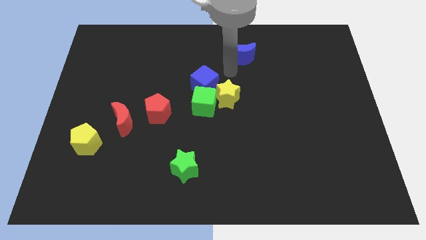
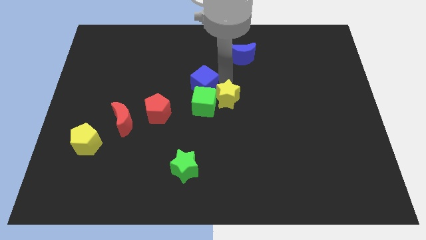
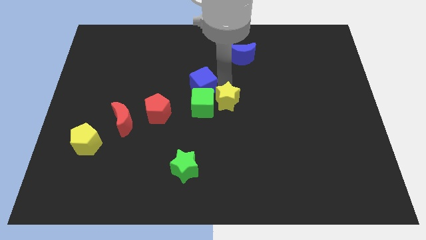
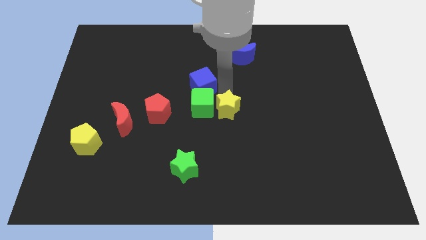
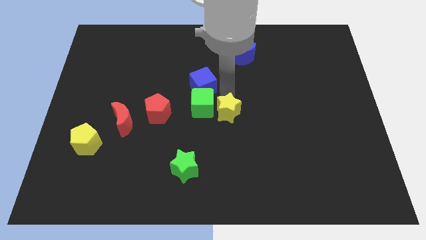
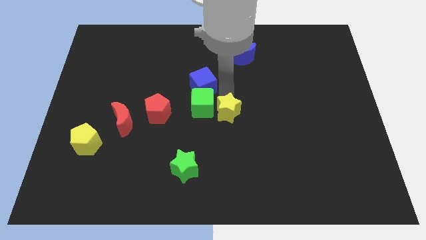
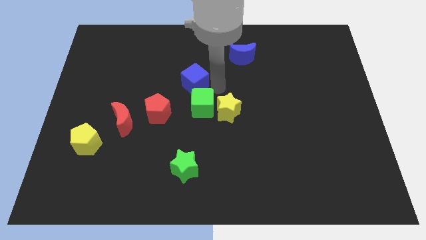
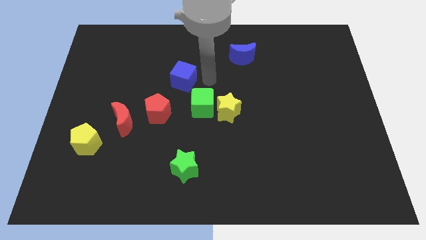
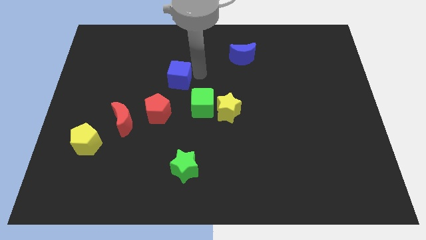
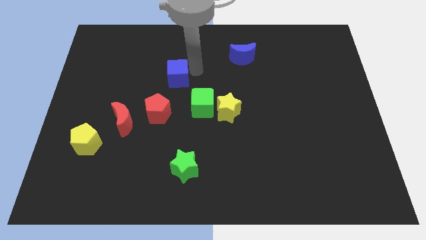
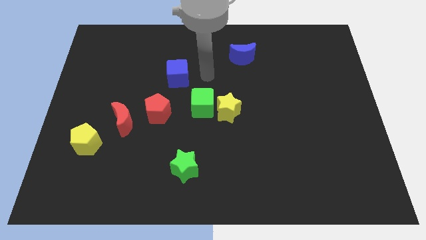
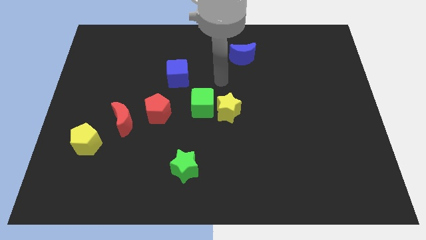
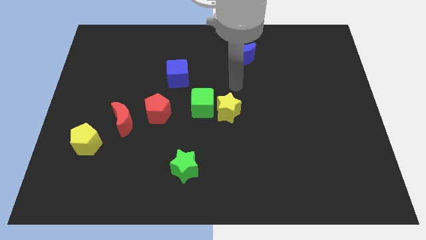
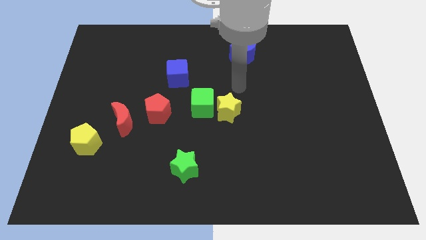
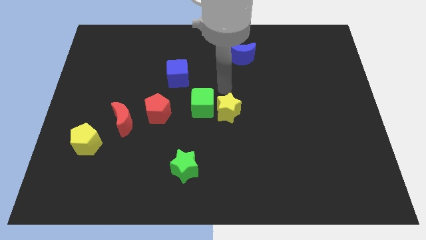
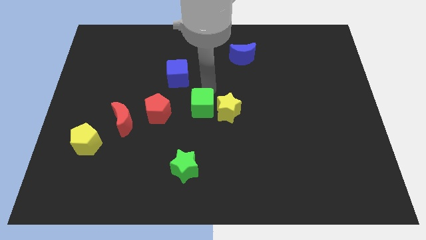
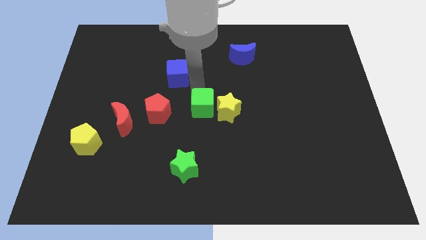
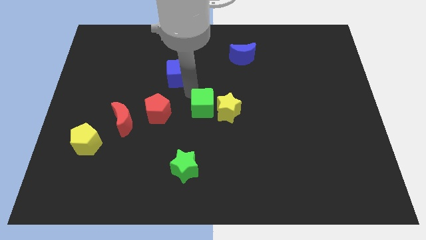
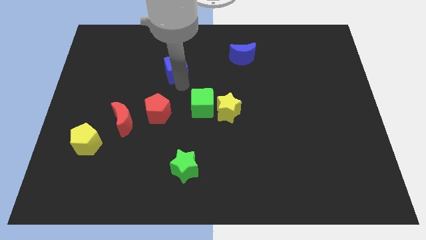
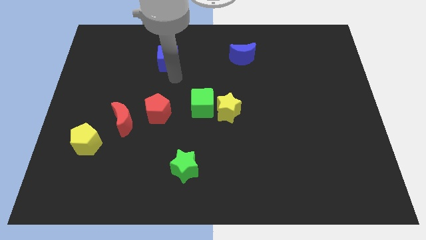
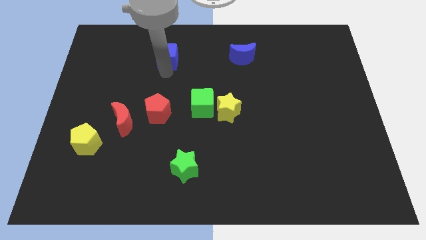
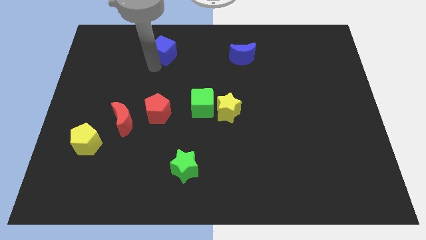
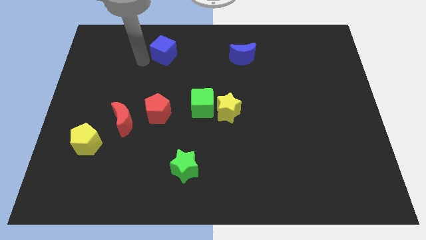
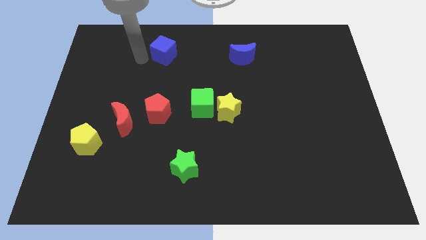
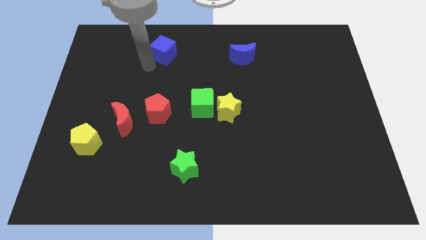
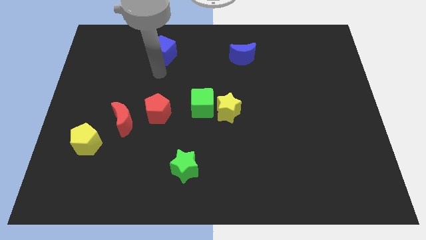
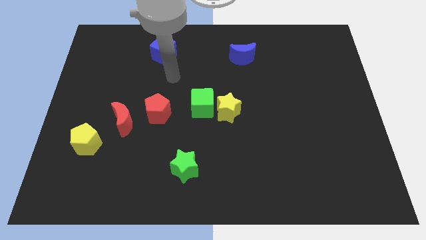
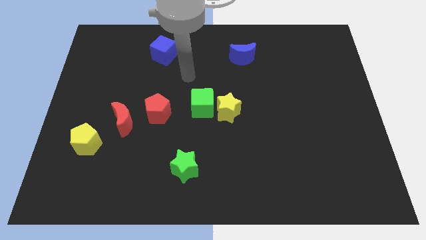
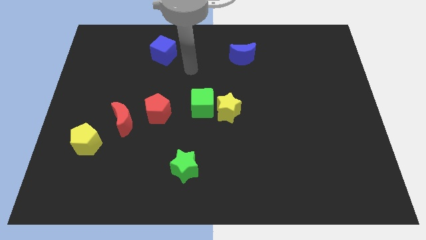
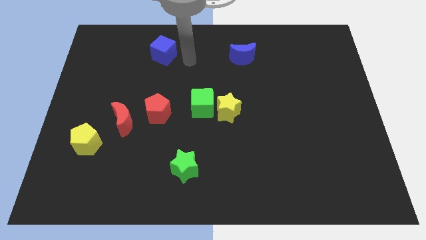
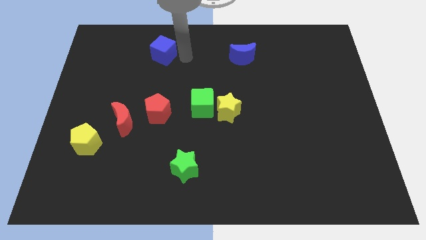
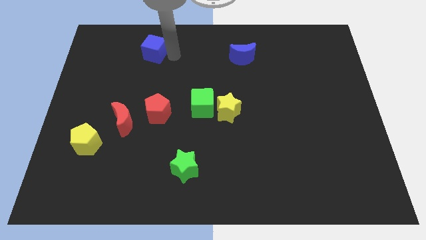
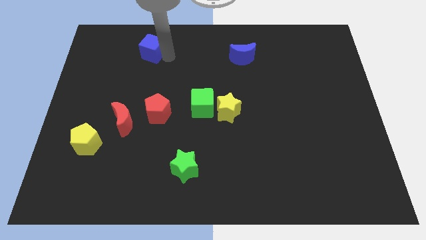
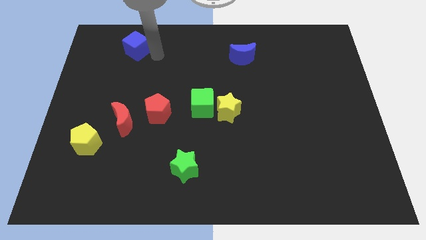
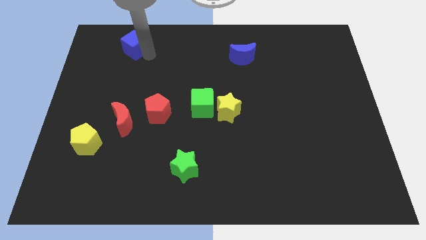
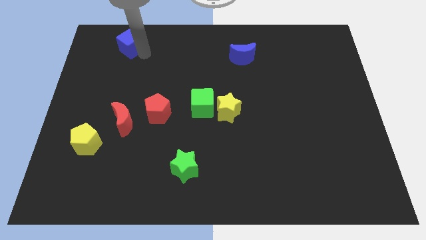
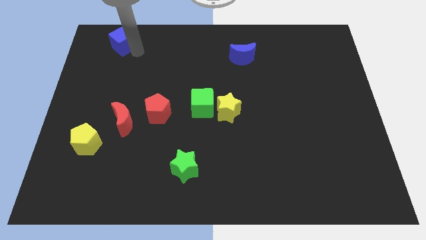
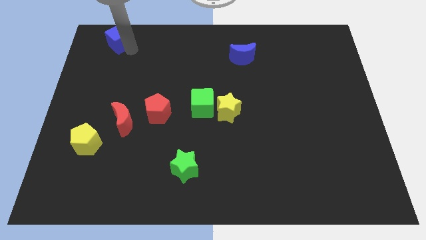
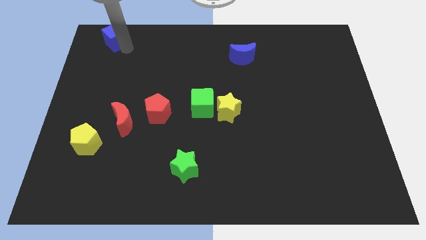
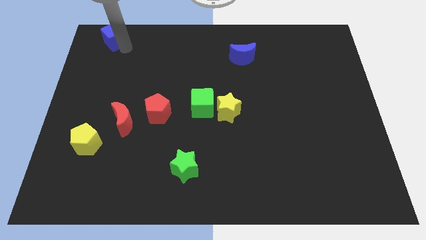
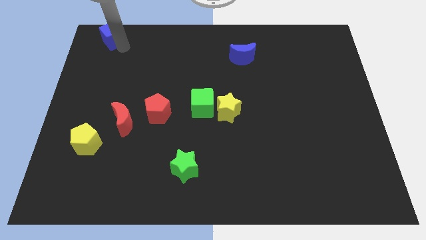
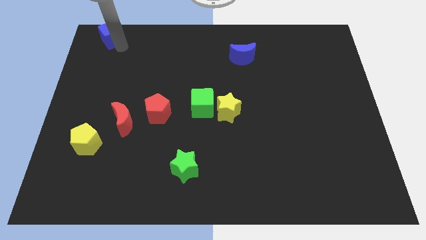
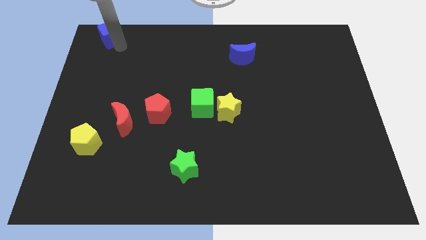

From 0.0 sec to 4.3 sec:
slide the blue cube towards the top left

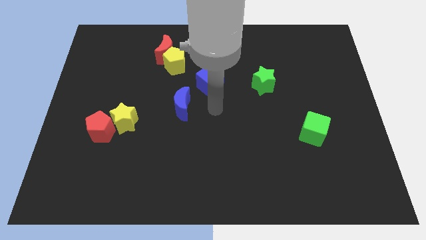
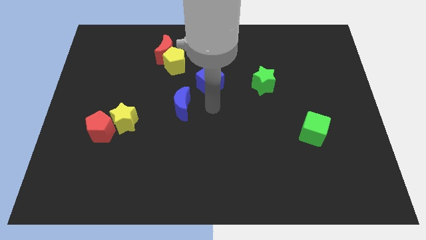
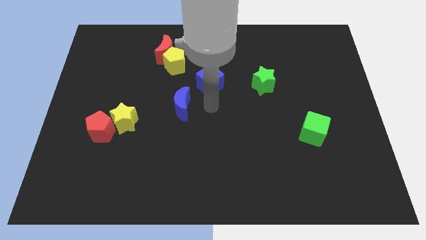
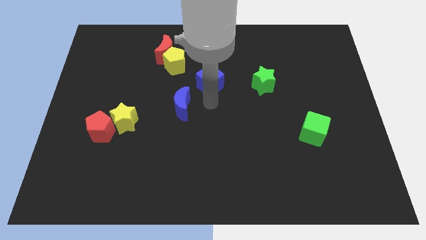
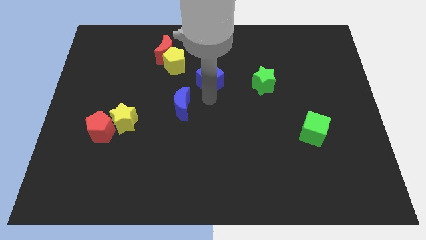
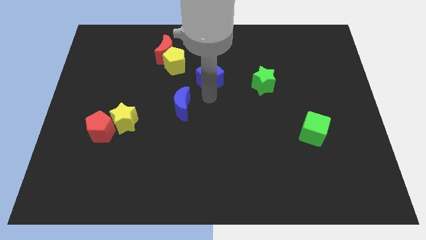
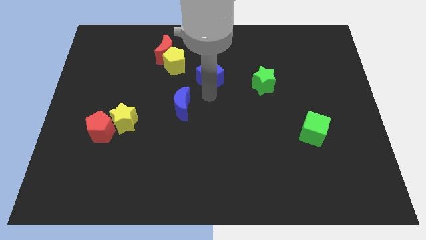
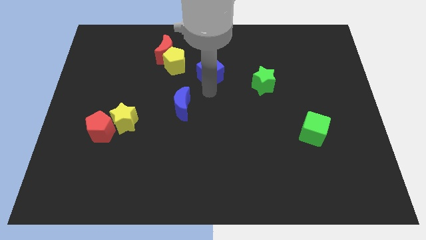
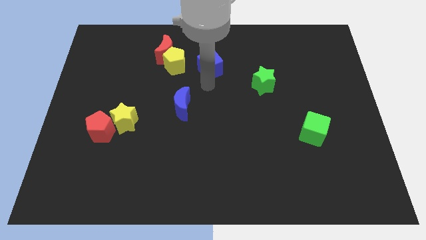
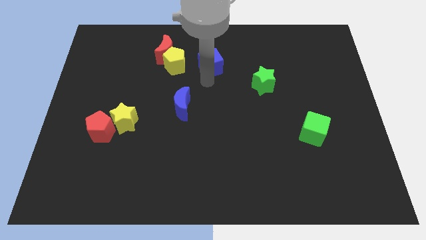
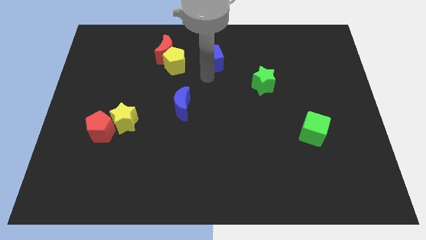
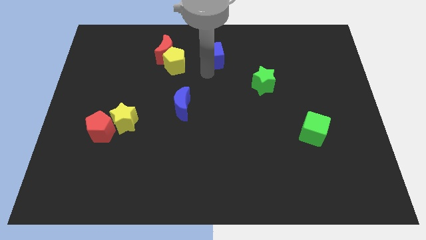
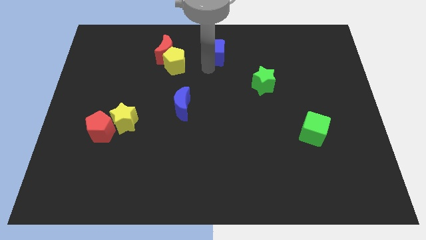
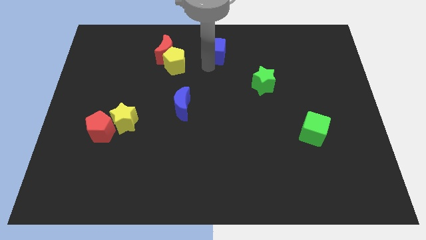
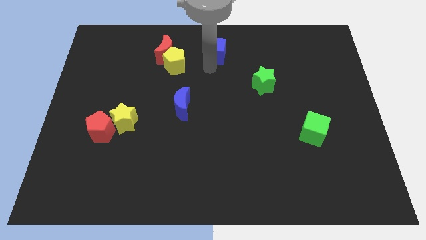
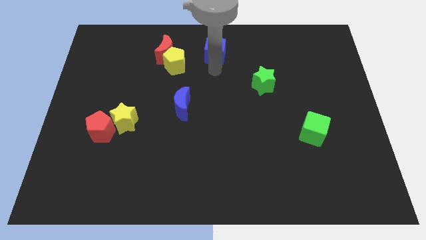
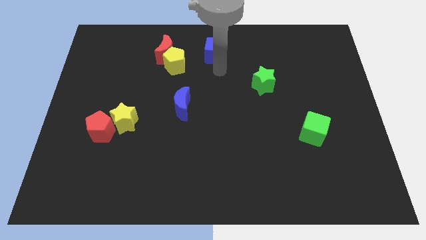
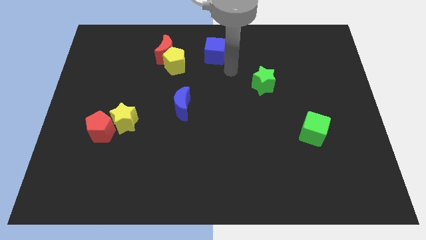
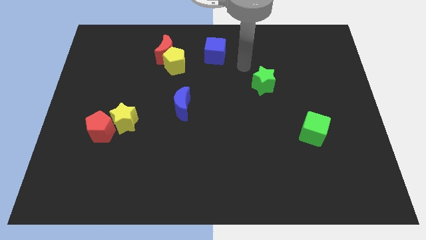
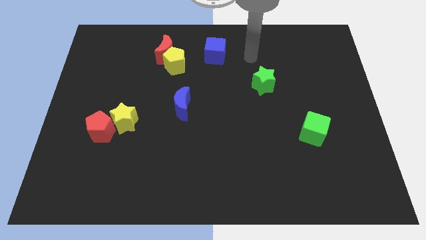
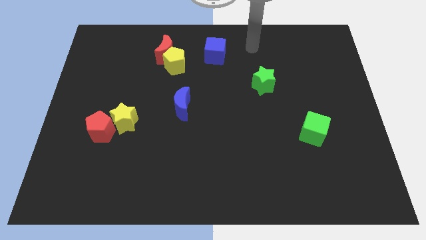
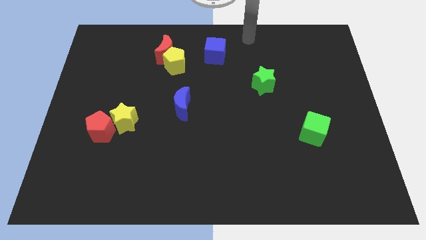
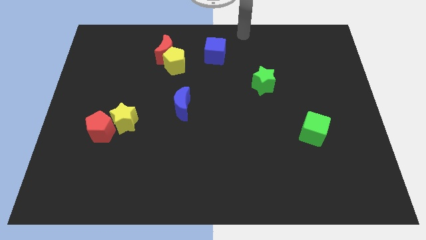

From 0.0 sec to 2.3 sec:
push the blue cube towards the top center of the board

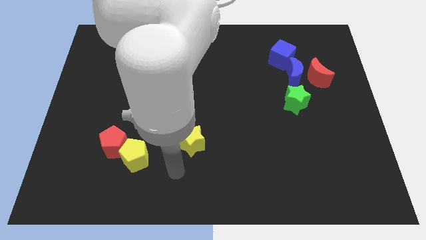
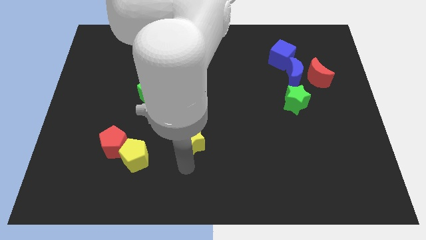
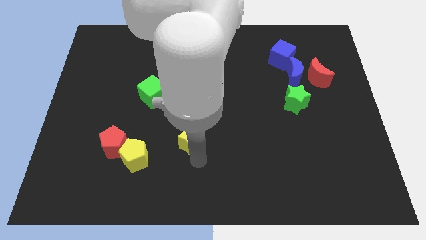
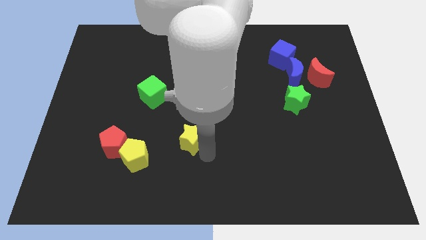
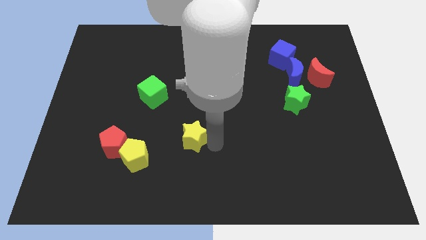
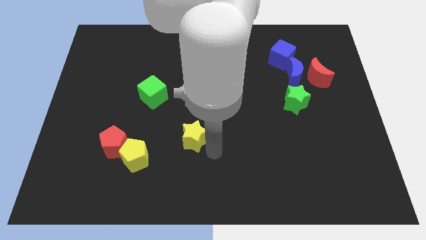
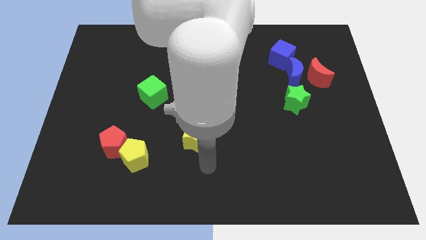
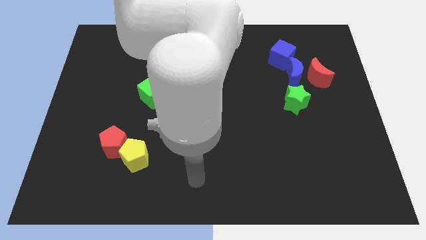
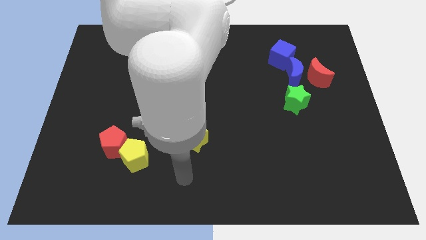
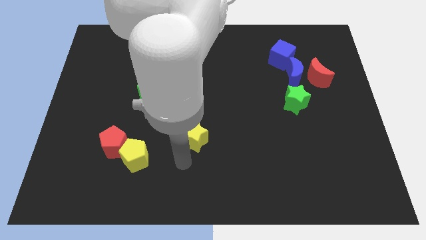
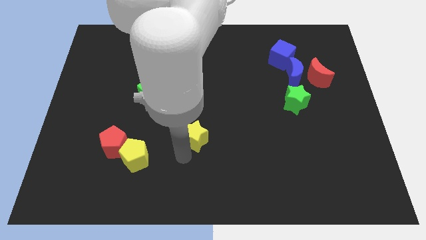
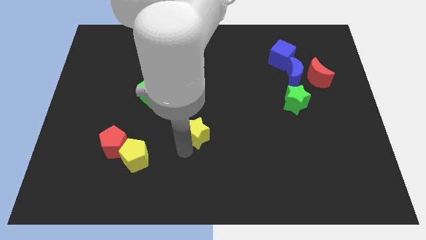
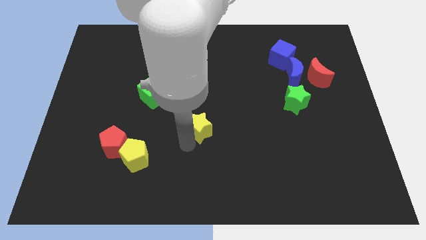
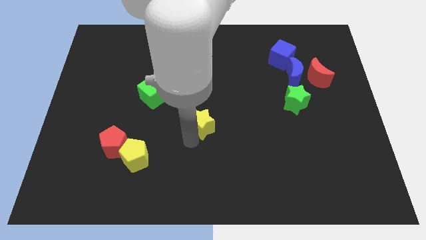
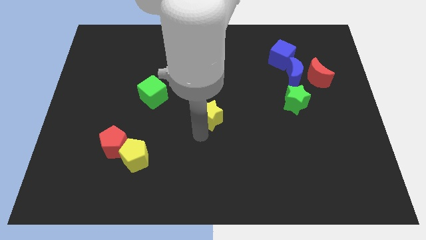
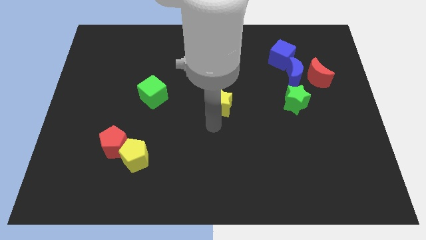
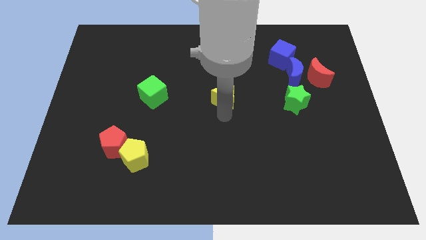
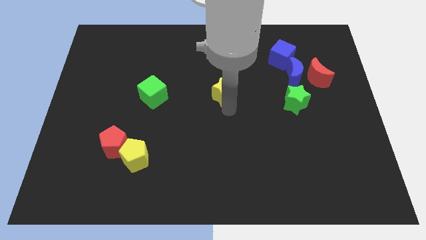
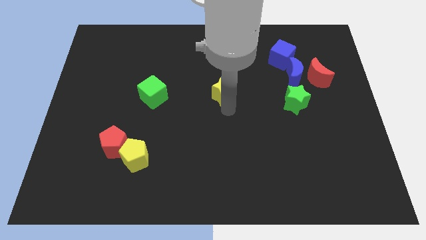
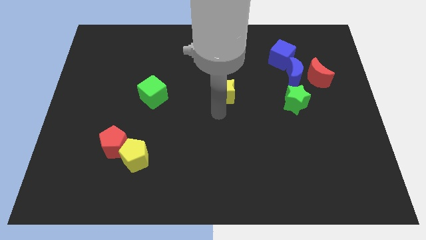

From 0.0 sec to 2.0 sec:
place the yellow star in between the green star and the green cube

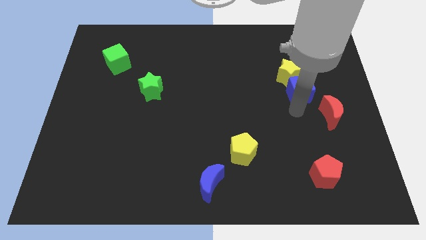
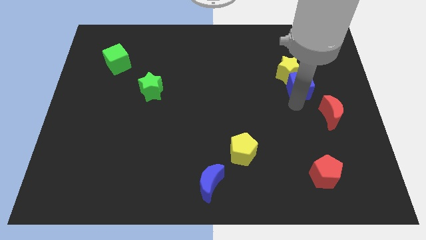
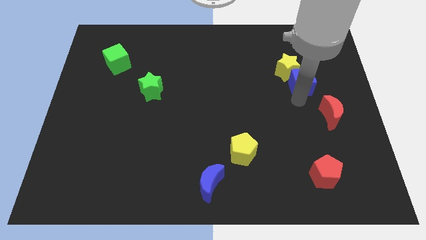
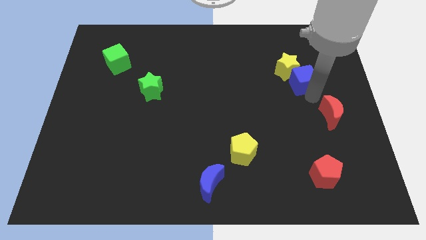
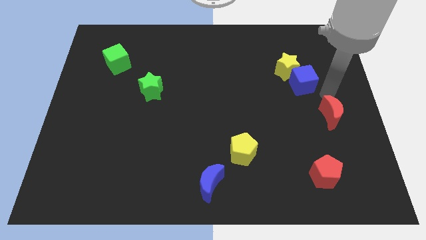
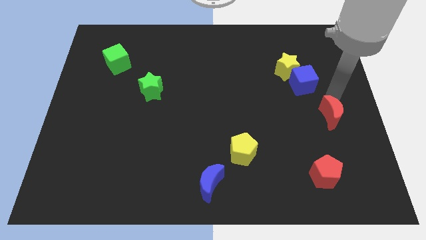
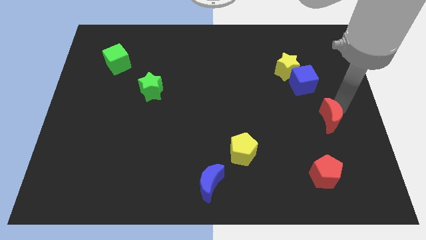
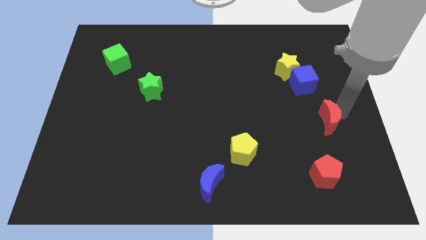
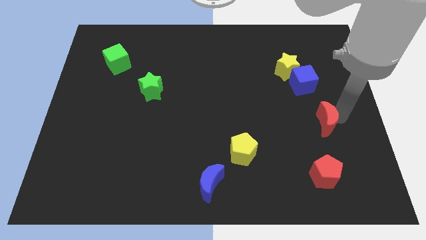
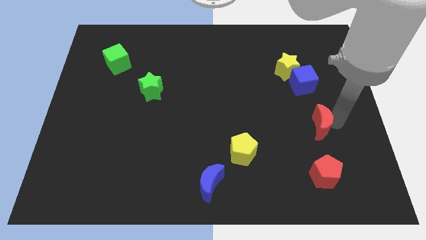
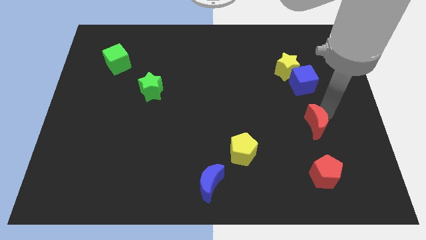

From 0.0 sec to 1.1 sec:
push red crescent above red pentagon
